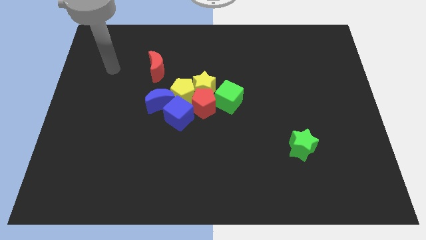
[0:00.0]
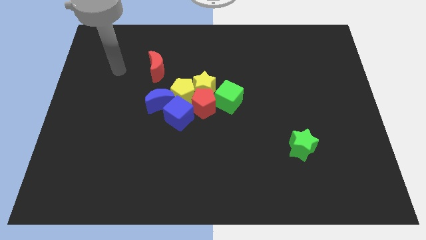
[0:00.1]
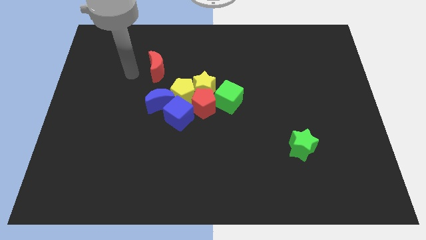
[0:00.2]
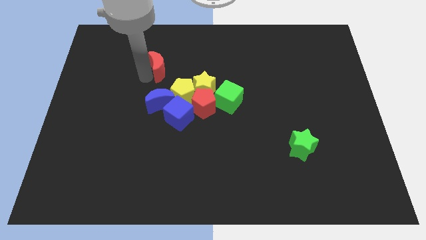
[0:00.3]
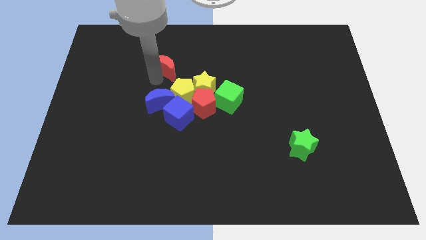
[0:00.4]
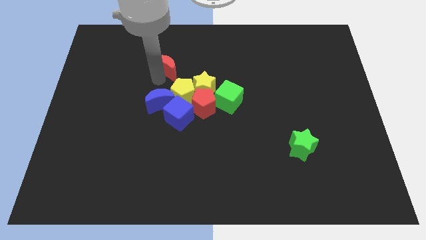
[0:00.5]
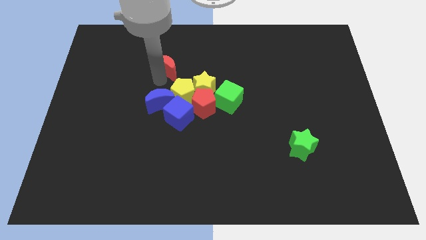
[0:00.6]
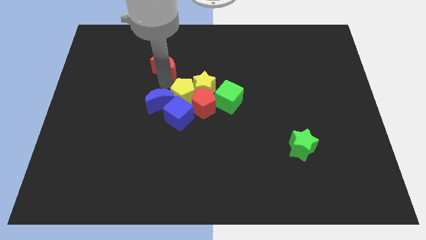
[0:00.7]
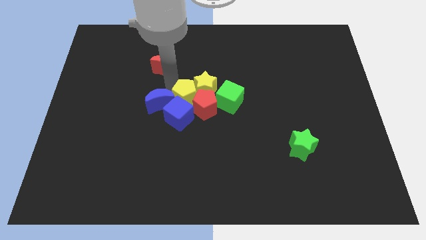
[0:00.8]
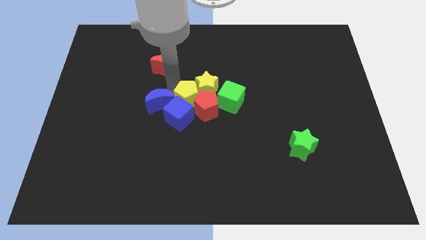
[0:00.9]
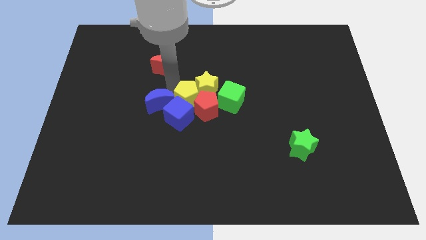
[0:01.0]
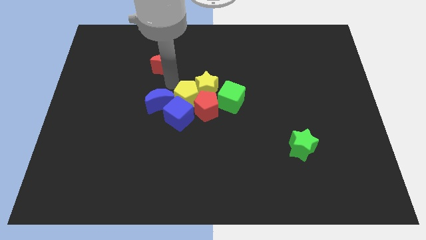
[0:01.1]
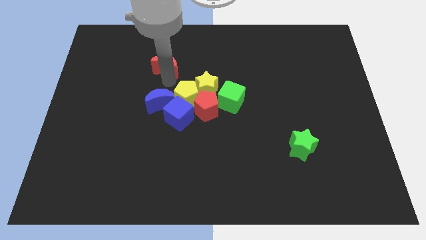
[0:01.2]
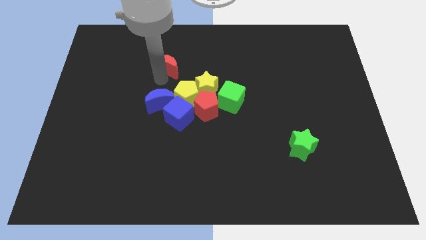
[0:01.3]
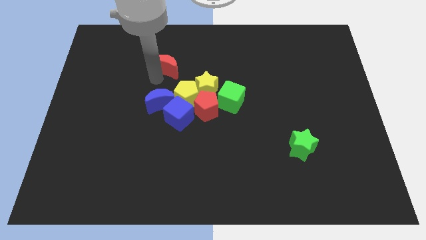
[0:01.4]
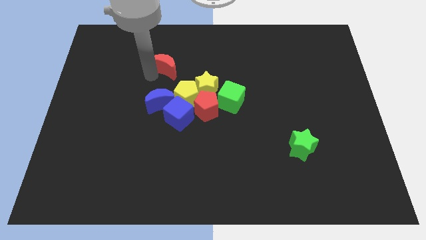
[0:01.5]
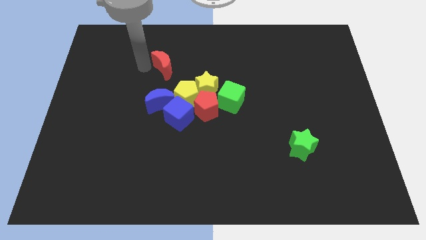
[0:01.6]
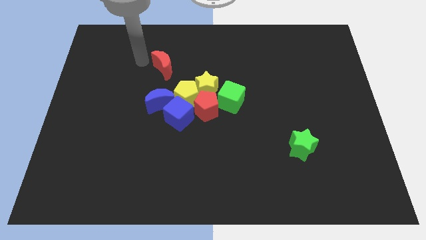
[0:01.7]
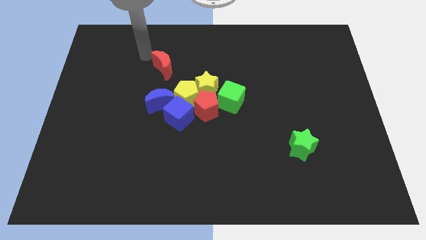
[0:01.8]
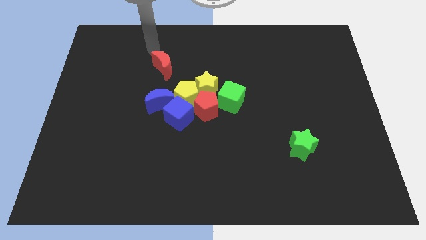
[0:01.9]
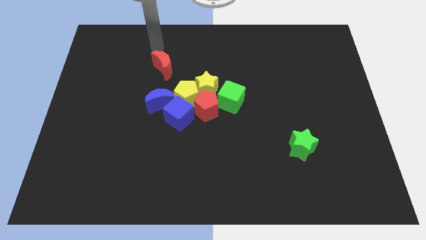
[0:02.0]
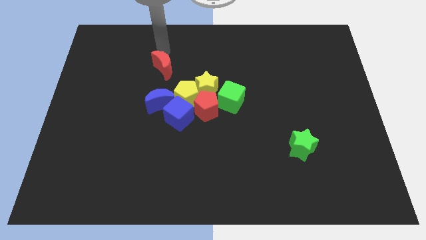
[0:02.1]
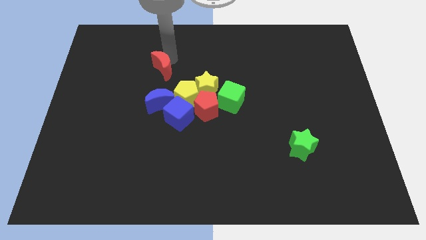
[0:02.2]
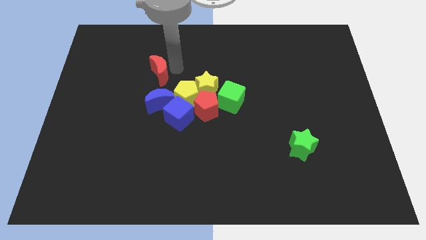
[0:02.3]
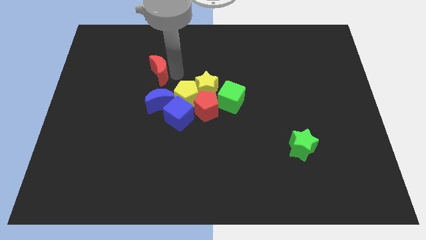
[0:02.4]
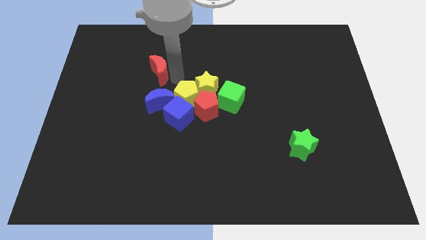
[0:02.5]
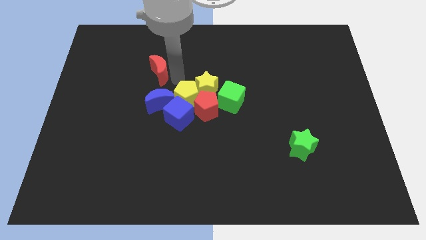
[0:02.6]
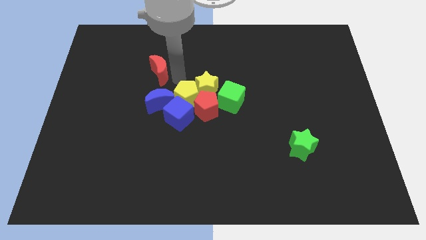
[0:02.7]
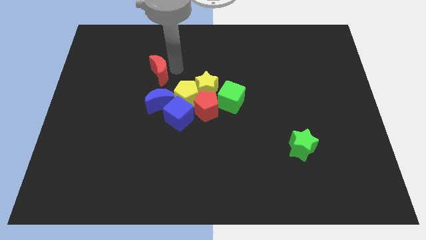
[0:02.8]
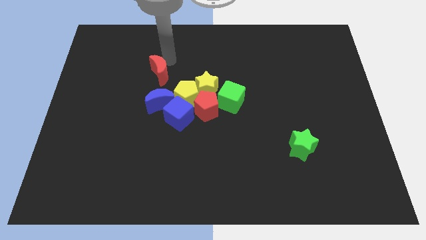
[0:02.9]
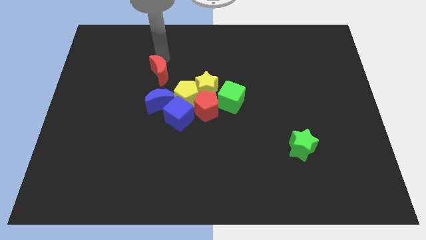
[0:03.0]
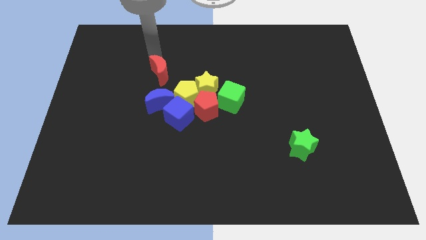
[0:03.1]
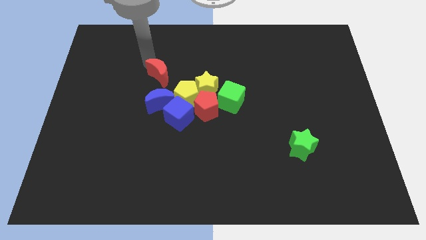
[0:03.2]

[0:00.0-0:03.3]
place the arm on the top of the red moon

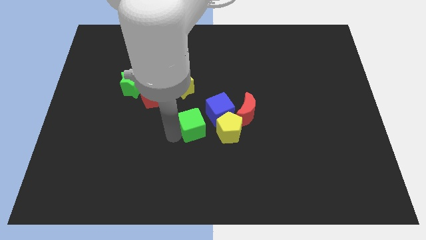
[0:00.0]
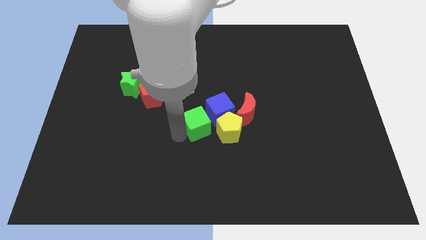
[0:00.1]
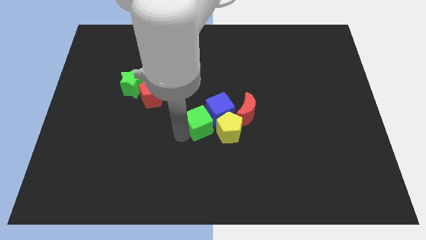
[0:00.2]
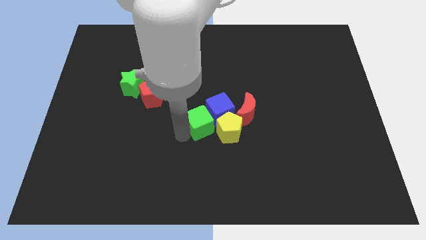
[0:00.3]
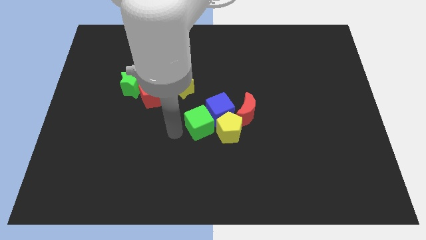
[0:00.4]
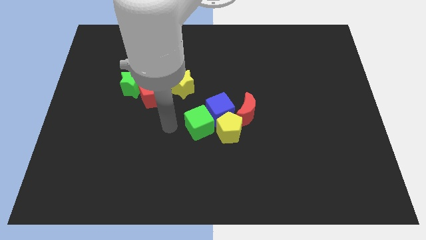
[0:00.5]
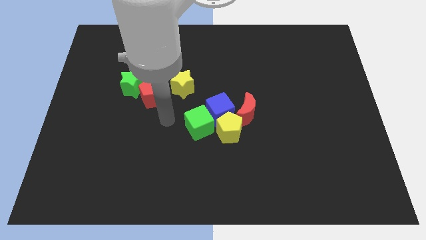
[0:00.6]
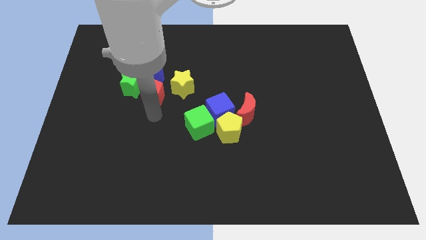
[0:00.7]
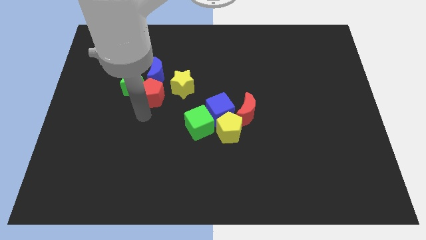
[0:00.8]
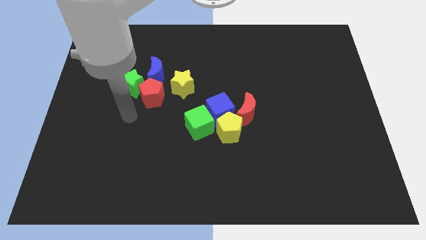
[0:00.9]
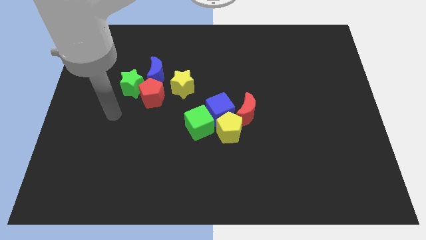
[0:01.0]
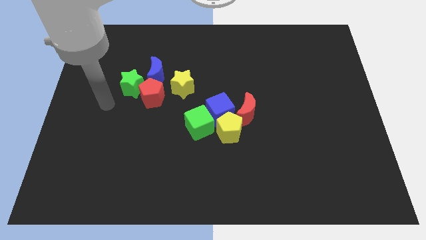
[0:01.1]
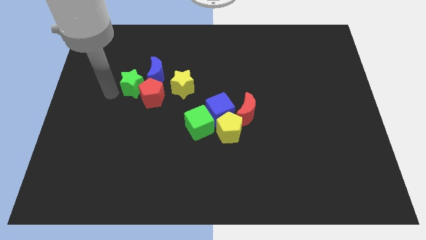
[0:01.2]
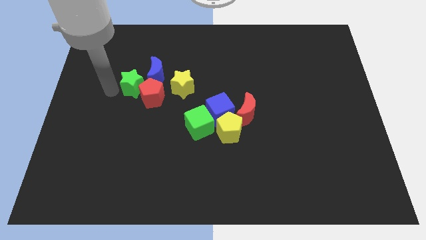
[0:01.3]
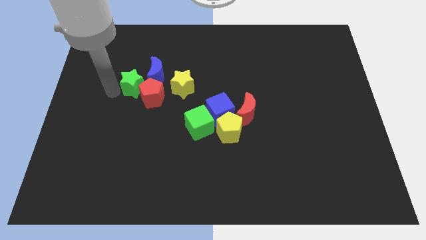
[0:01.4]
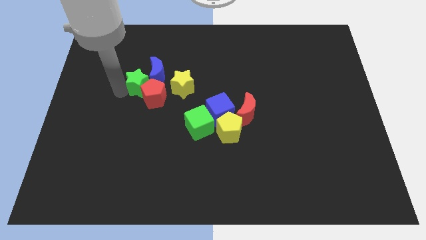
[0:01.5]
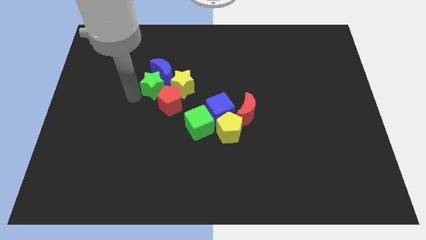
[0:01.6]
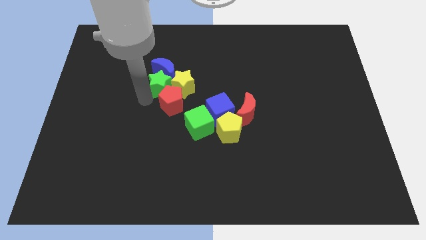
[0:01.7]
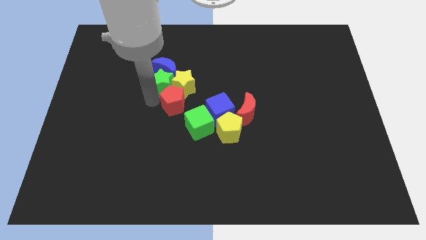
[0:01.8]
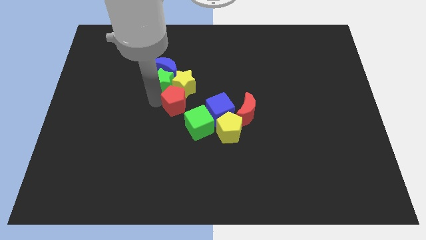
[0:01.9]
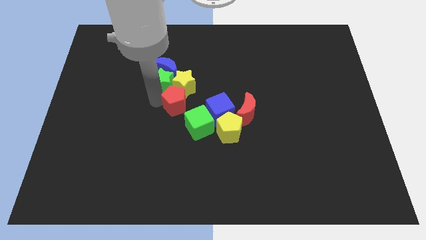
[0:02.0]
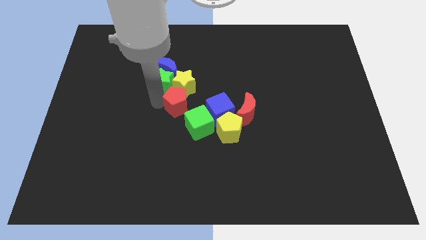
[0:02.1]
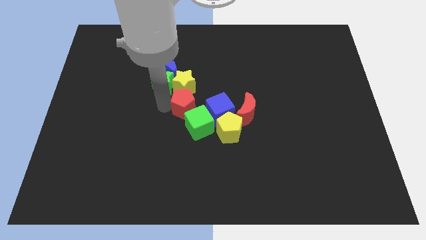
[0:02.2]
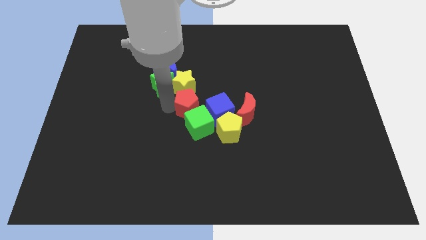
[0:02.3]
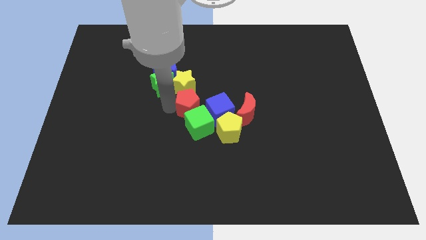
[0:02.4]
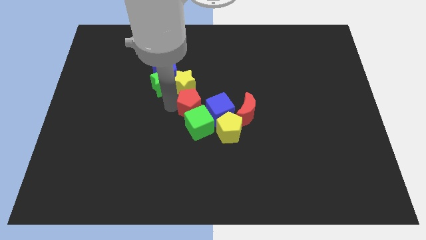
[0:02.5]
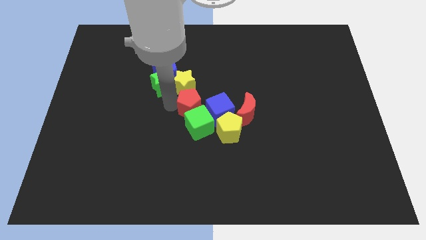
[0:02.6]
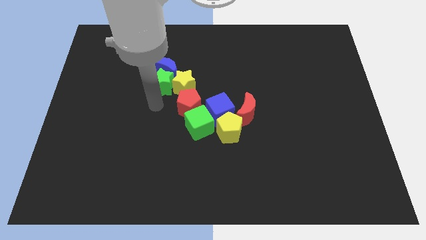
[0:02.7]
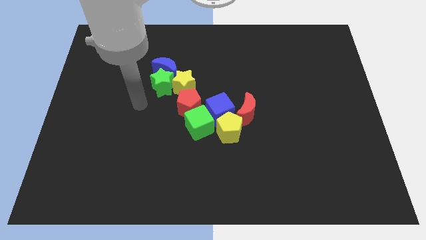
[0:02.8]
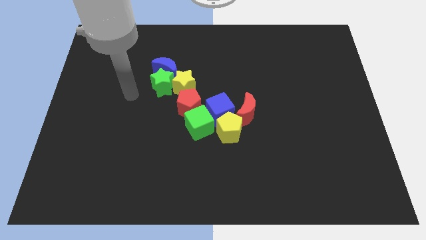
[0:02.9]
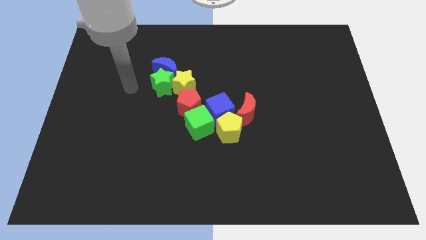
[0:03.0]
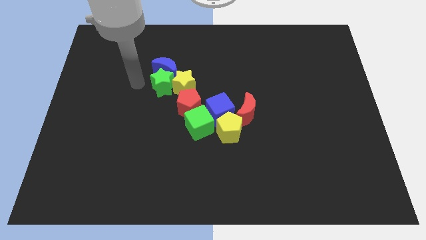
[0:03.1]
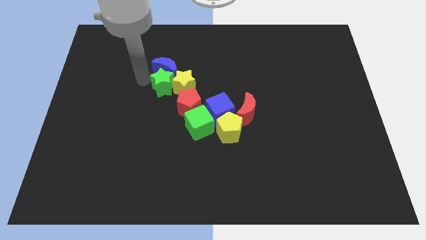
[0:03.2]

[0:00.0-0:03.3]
place the red pentagon in between the yellow star and green cube

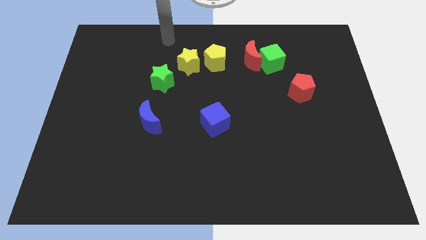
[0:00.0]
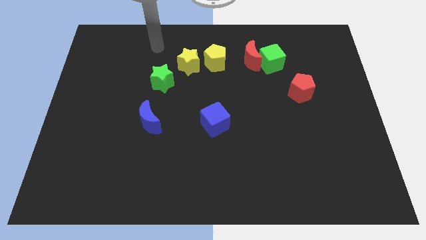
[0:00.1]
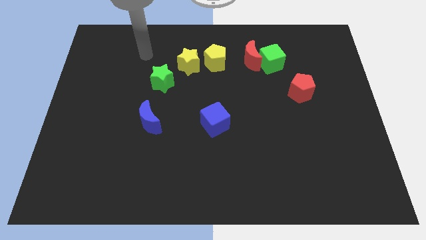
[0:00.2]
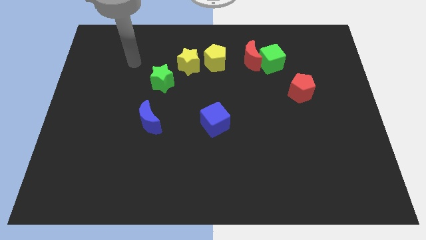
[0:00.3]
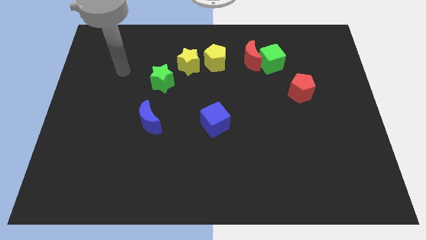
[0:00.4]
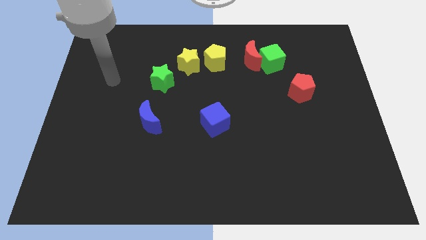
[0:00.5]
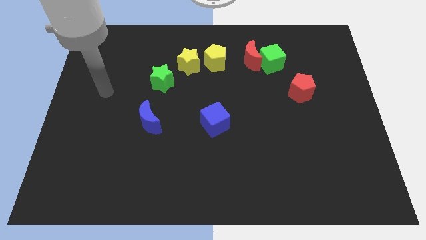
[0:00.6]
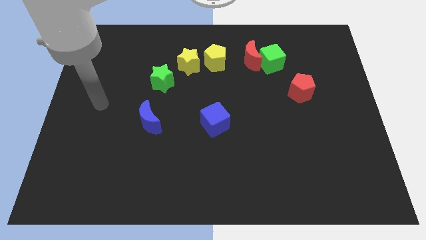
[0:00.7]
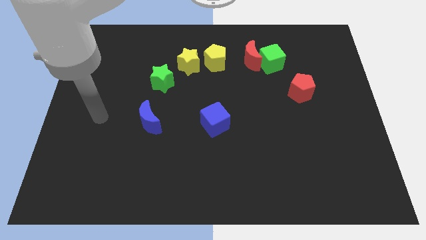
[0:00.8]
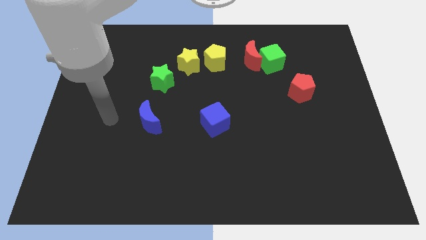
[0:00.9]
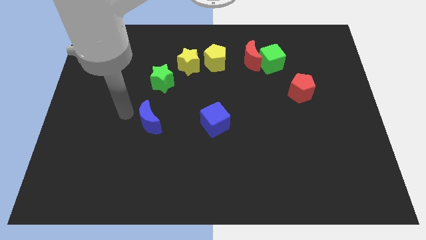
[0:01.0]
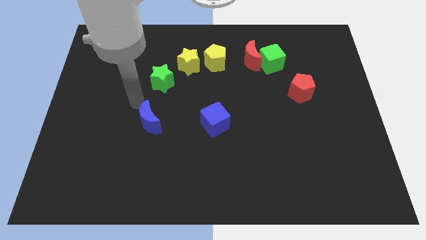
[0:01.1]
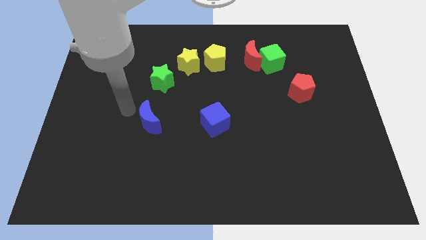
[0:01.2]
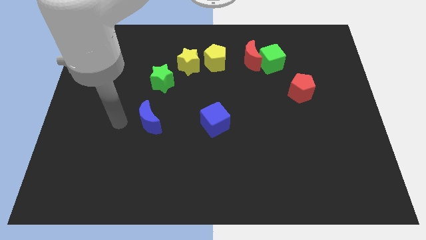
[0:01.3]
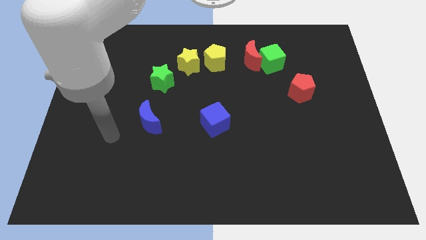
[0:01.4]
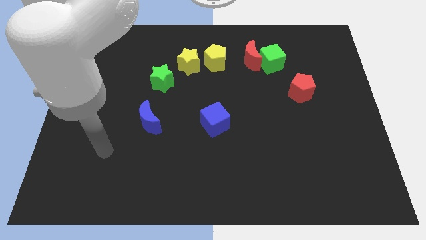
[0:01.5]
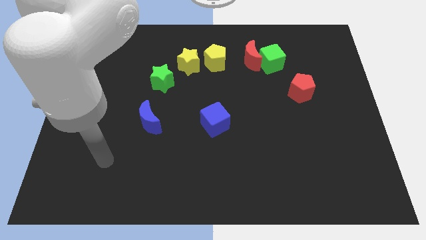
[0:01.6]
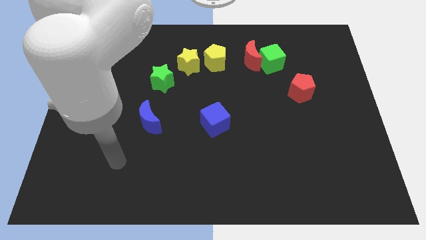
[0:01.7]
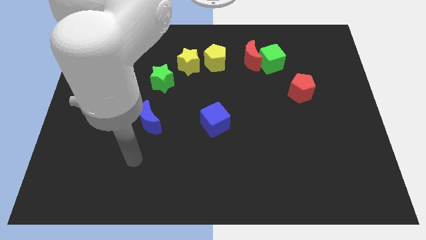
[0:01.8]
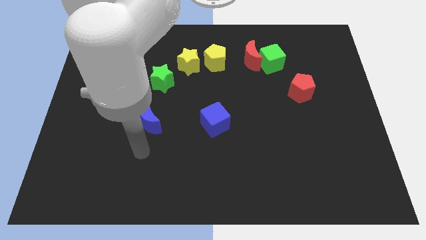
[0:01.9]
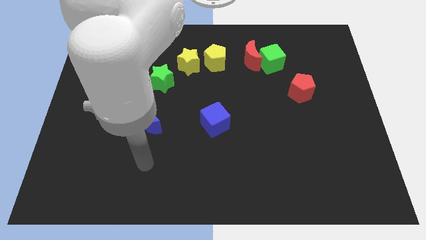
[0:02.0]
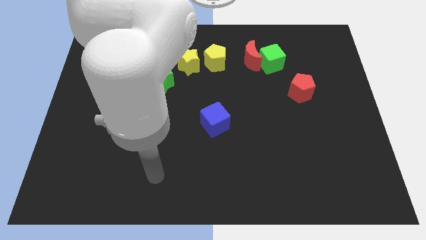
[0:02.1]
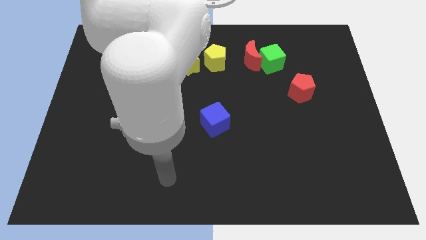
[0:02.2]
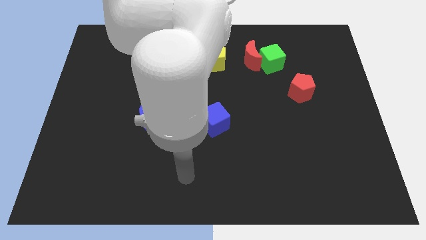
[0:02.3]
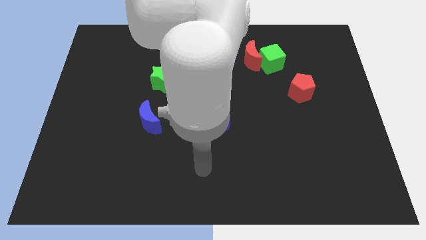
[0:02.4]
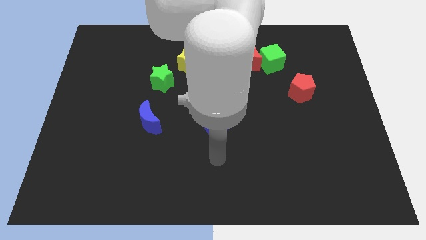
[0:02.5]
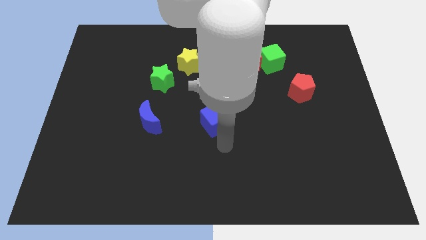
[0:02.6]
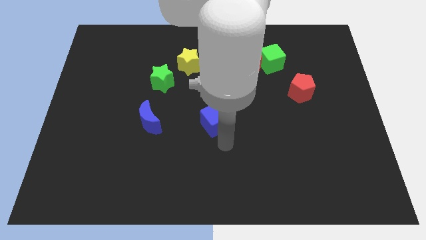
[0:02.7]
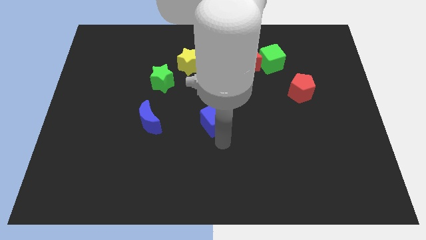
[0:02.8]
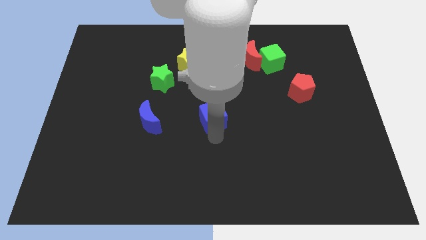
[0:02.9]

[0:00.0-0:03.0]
point your arm at the bottom of the blue cube
